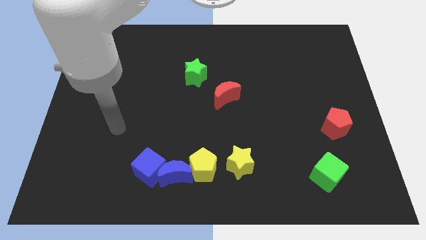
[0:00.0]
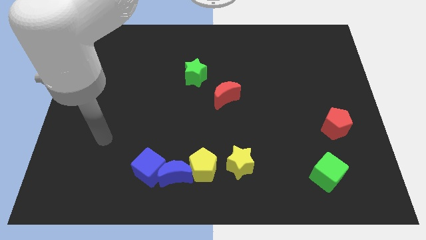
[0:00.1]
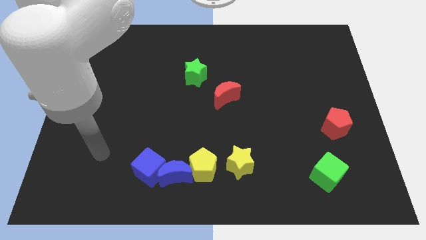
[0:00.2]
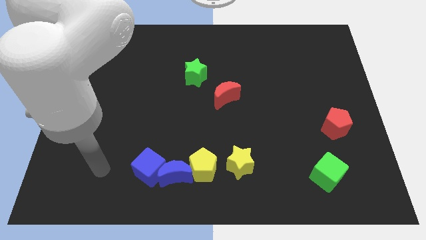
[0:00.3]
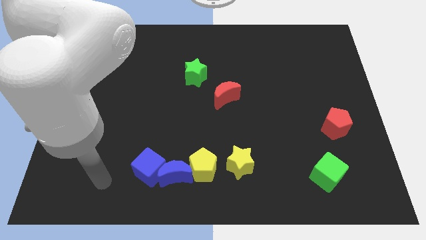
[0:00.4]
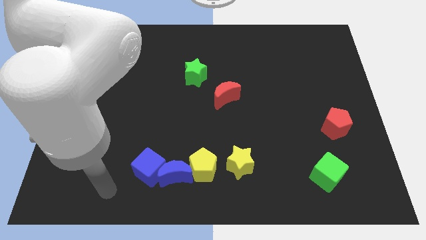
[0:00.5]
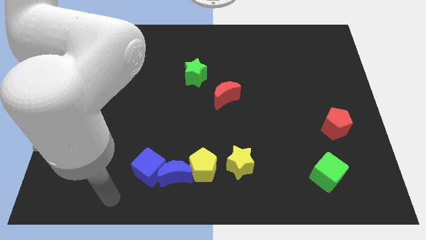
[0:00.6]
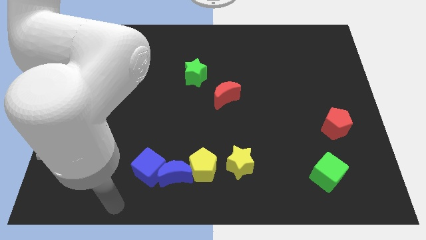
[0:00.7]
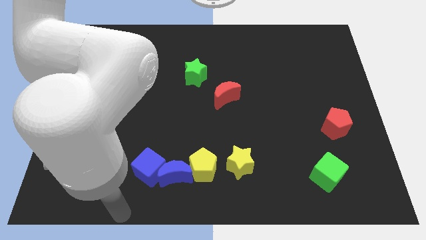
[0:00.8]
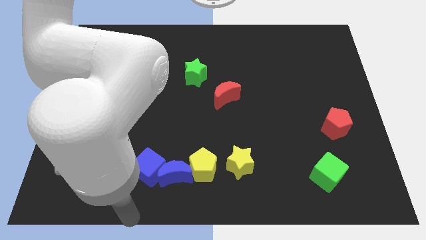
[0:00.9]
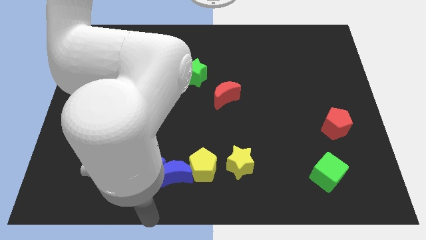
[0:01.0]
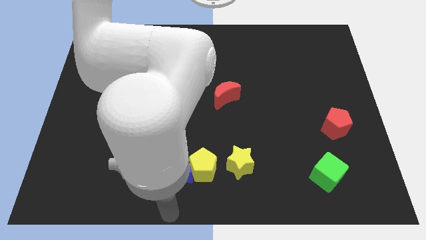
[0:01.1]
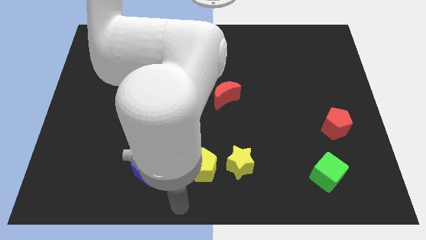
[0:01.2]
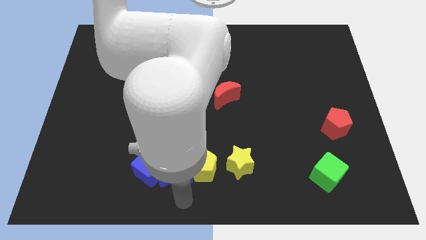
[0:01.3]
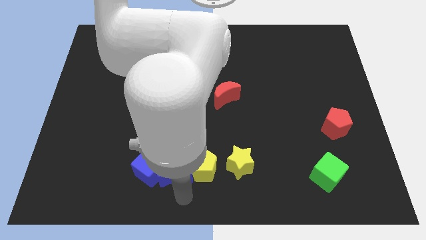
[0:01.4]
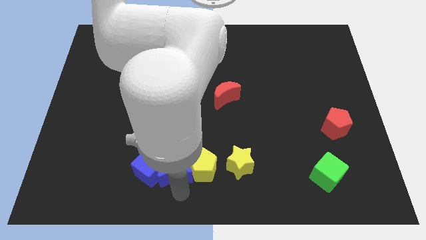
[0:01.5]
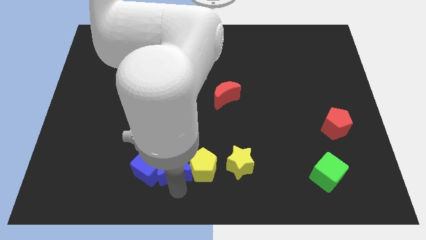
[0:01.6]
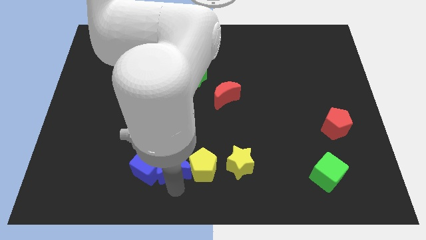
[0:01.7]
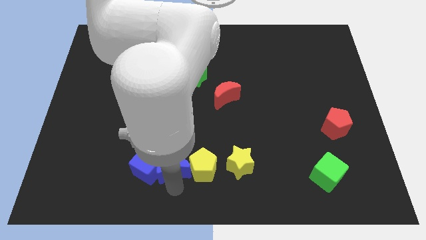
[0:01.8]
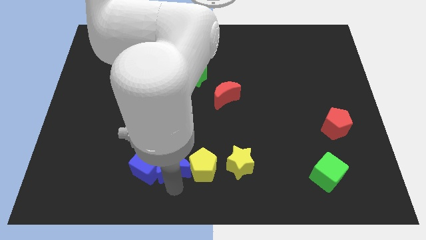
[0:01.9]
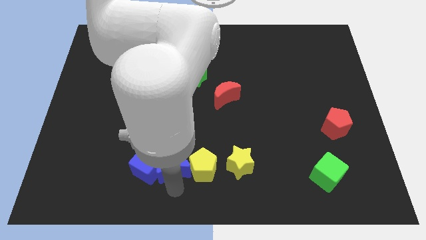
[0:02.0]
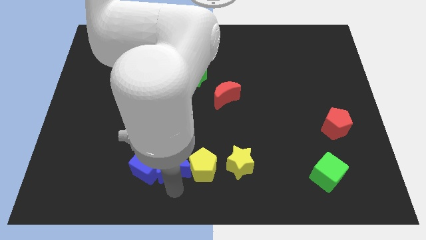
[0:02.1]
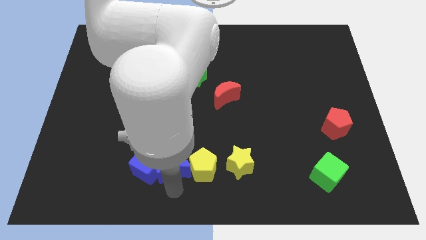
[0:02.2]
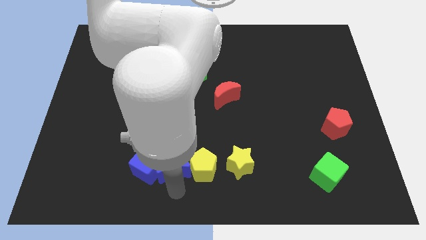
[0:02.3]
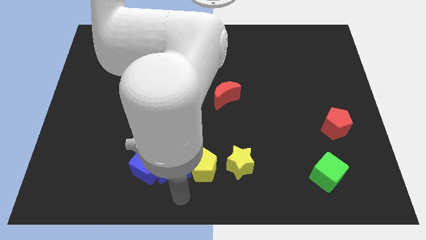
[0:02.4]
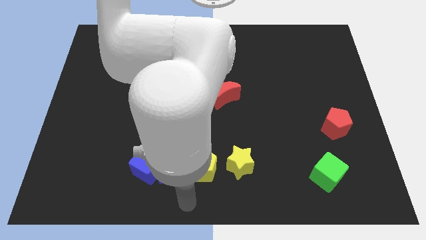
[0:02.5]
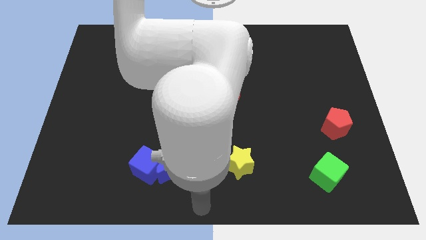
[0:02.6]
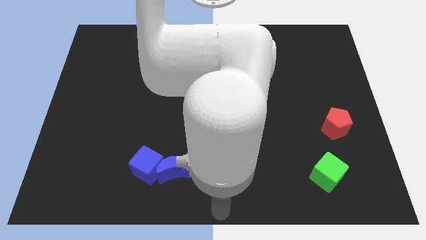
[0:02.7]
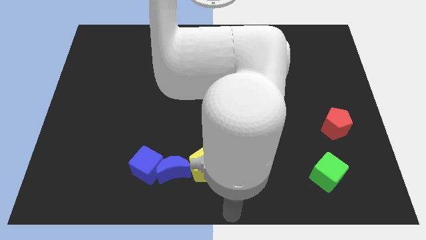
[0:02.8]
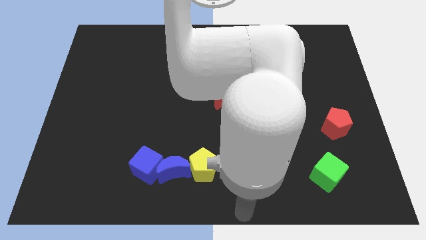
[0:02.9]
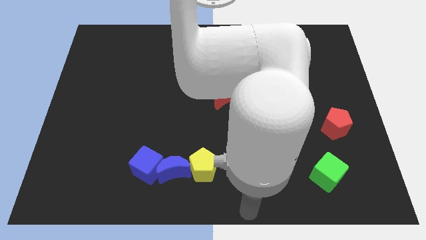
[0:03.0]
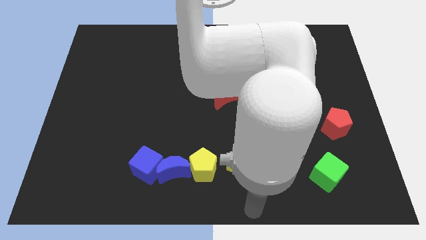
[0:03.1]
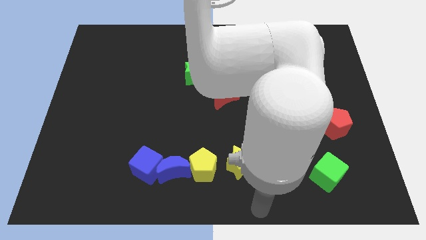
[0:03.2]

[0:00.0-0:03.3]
move your arm towards the bottom center of the board

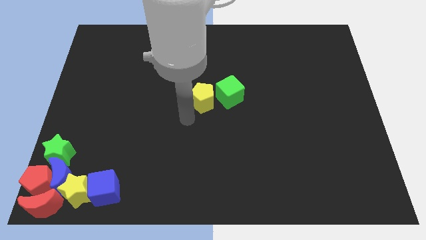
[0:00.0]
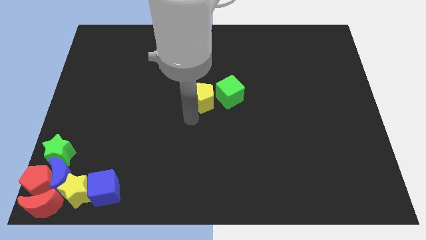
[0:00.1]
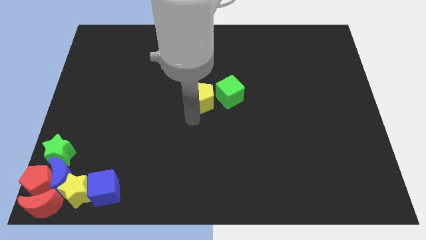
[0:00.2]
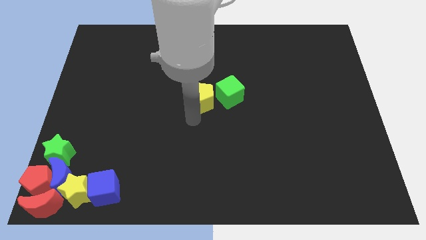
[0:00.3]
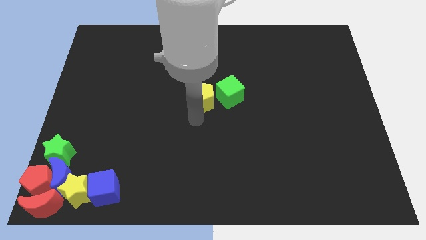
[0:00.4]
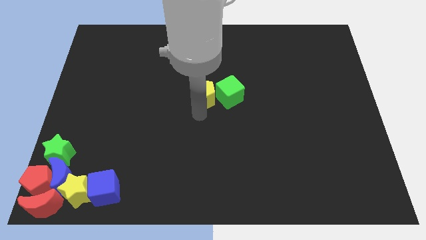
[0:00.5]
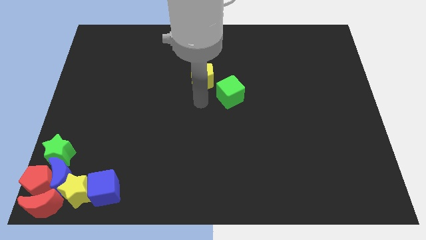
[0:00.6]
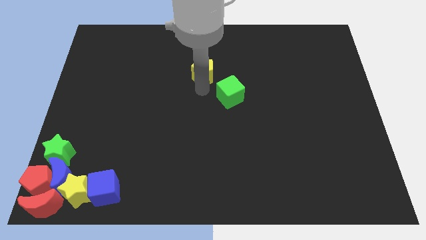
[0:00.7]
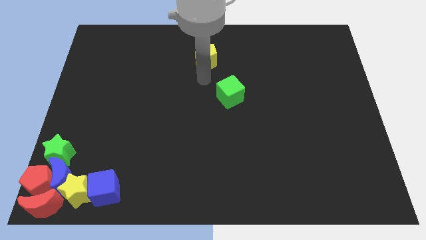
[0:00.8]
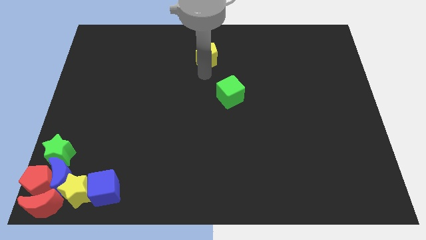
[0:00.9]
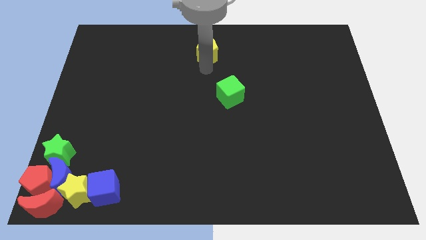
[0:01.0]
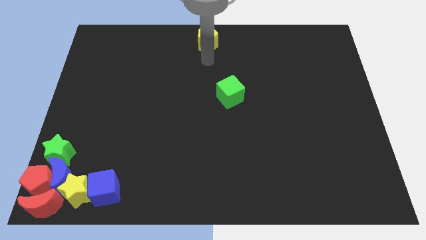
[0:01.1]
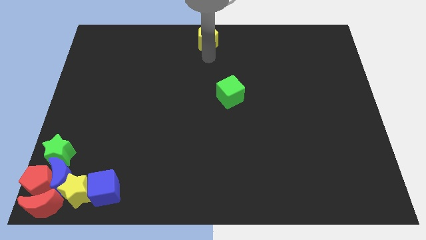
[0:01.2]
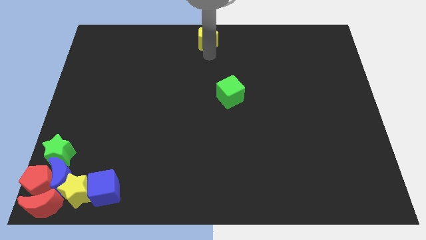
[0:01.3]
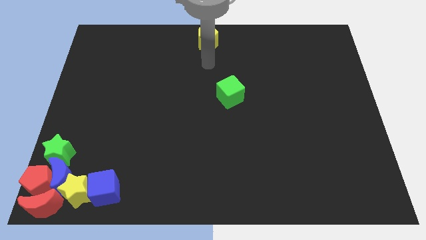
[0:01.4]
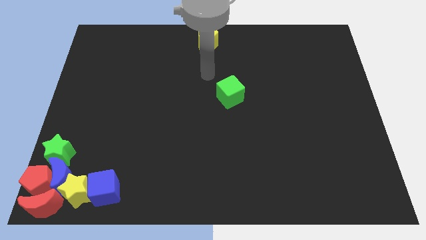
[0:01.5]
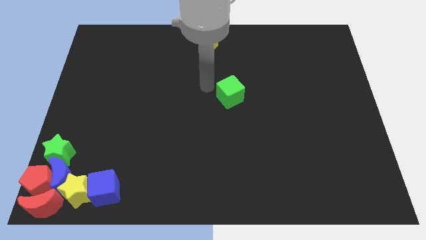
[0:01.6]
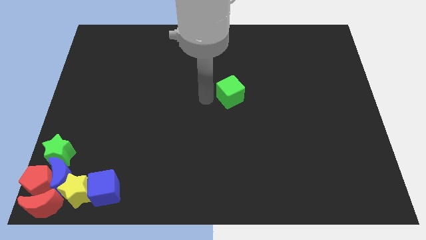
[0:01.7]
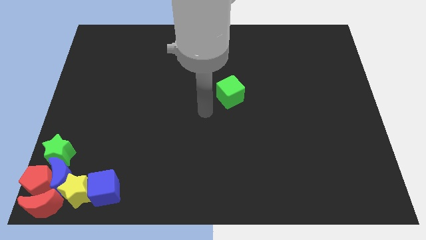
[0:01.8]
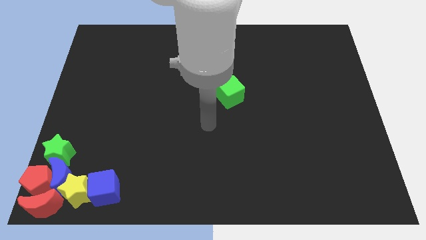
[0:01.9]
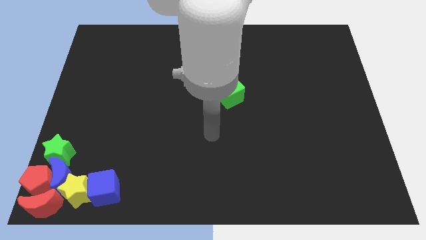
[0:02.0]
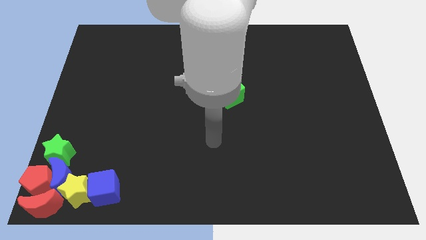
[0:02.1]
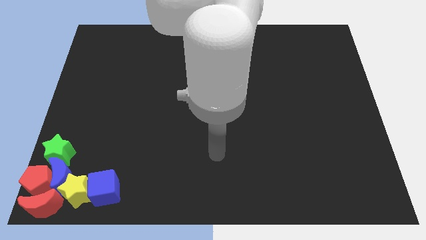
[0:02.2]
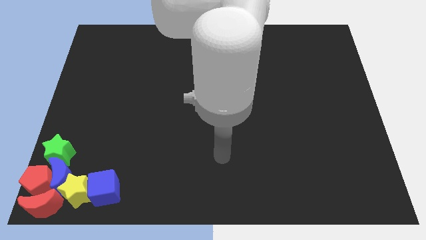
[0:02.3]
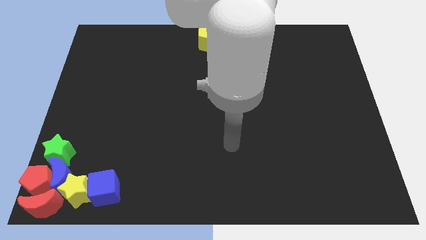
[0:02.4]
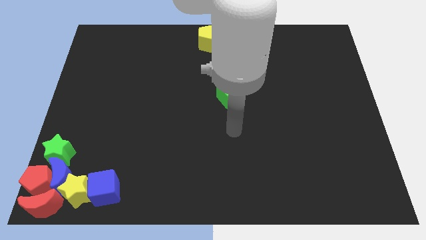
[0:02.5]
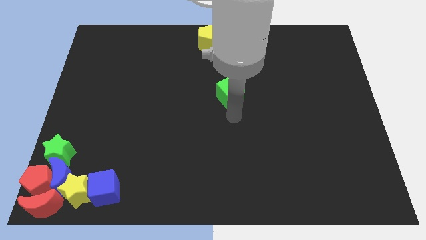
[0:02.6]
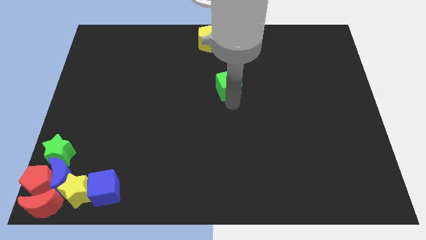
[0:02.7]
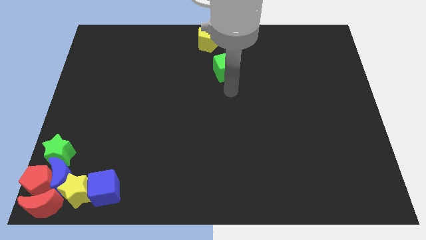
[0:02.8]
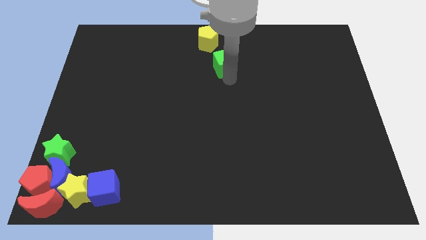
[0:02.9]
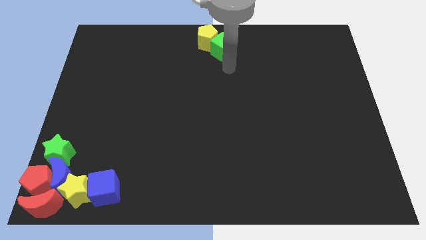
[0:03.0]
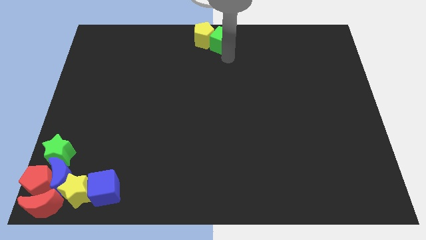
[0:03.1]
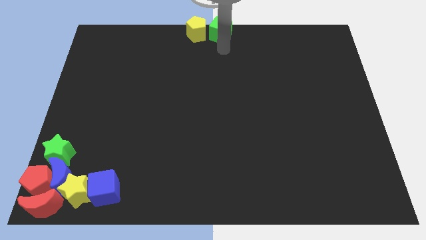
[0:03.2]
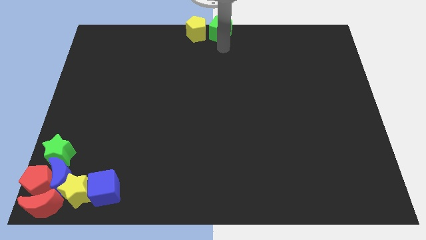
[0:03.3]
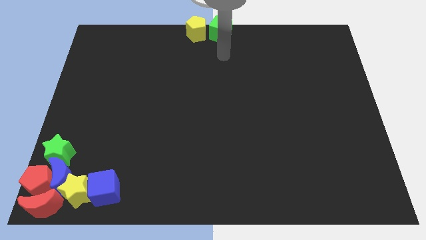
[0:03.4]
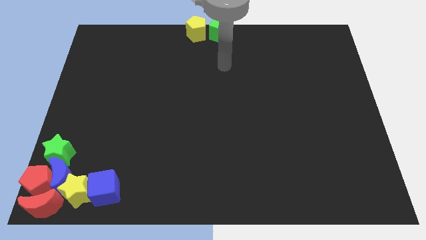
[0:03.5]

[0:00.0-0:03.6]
move the yellow pentagon along with green cube towards the top center of the board

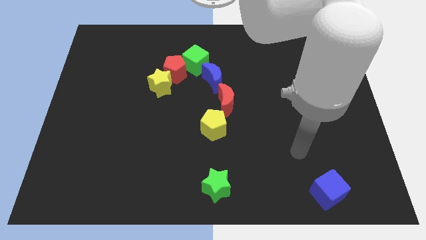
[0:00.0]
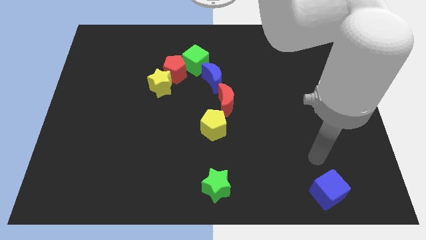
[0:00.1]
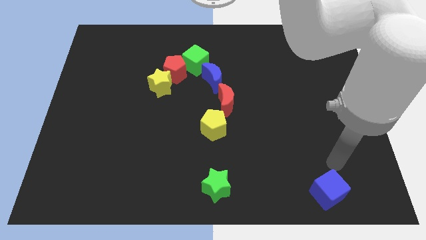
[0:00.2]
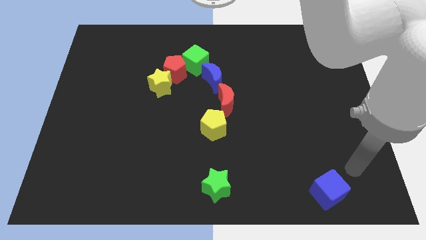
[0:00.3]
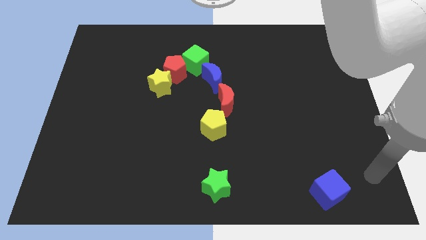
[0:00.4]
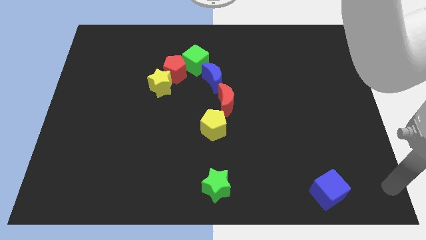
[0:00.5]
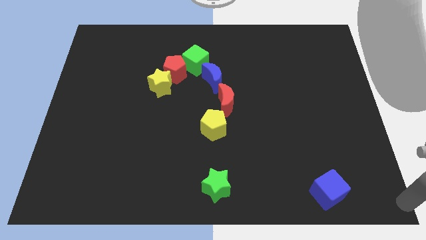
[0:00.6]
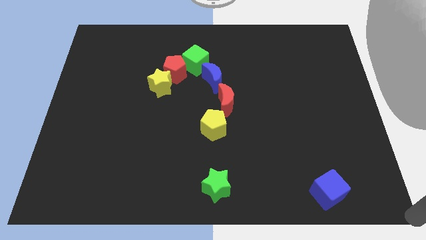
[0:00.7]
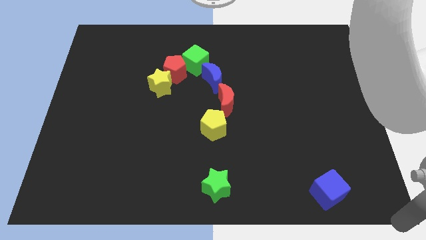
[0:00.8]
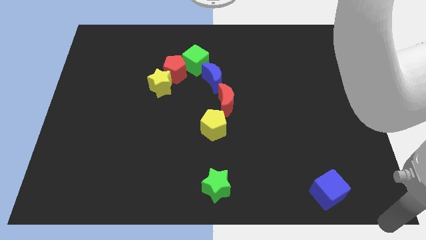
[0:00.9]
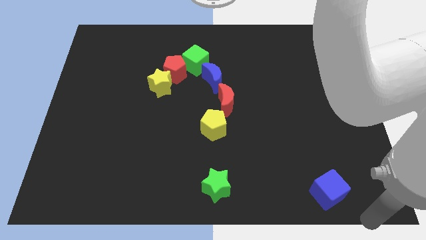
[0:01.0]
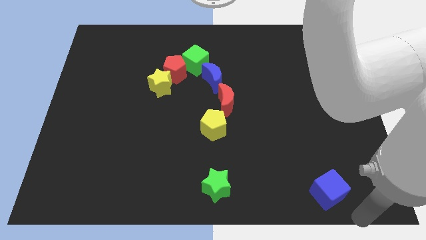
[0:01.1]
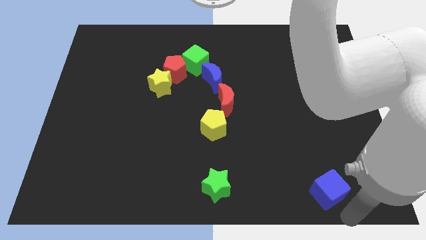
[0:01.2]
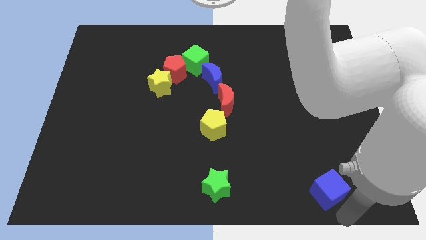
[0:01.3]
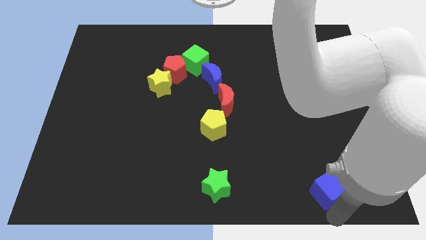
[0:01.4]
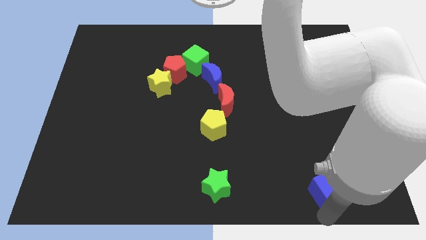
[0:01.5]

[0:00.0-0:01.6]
place the arm down to the blue cube

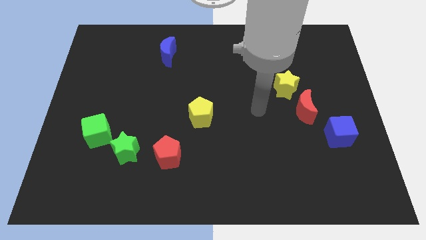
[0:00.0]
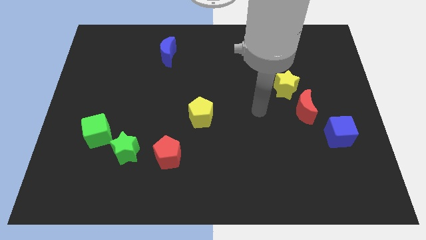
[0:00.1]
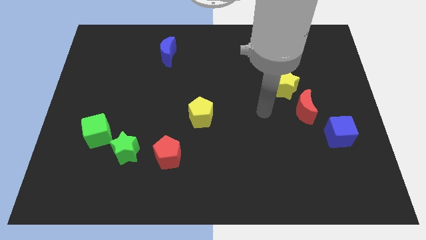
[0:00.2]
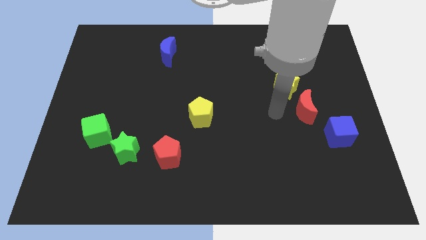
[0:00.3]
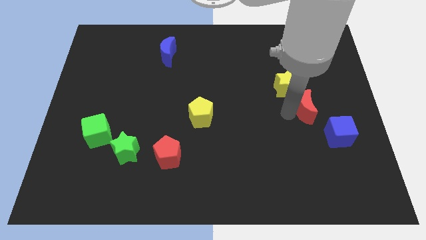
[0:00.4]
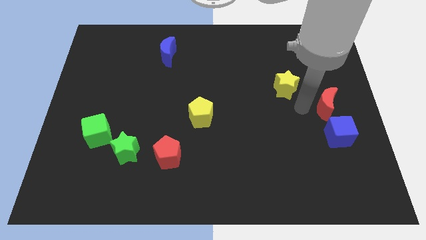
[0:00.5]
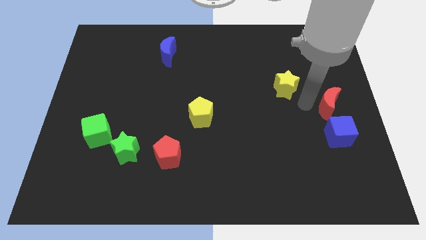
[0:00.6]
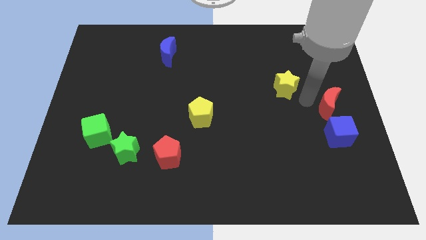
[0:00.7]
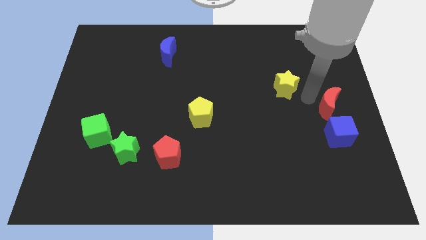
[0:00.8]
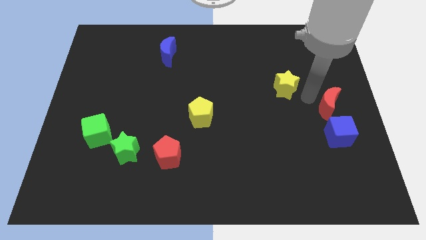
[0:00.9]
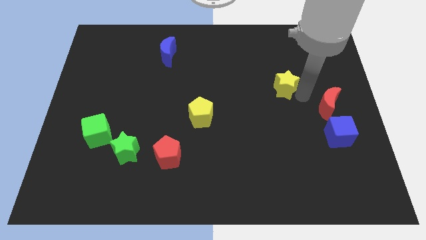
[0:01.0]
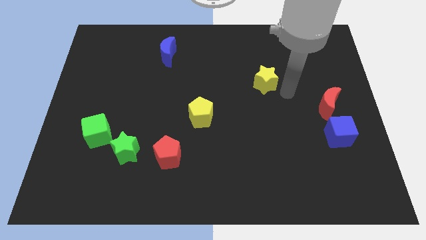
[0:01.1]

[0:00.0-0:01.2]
place the red moon above the blue cube
